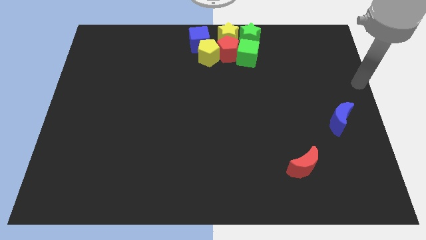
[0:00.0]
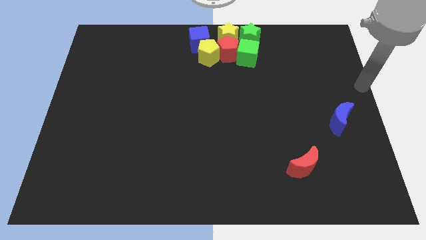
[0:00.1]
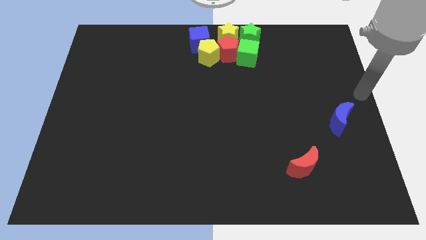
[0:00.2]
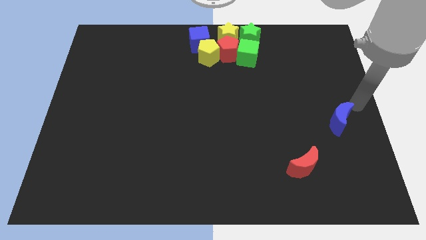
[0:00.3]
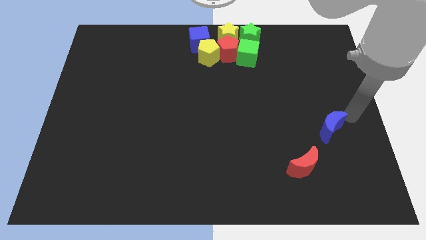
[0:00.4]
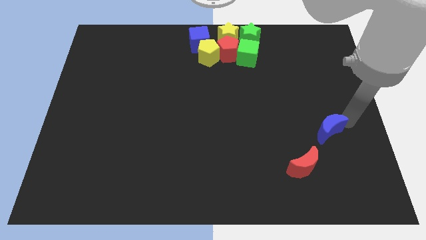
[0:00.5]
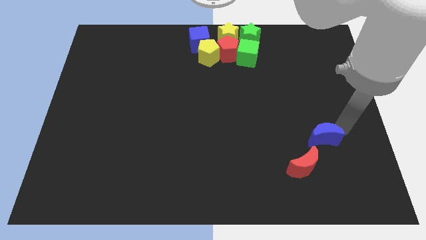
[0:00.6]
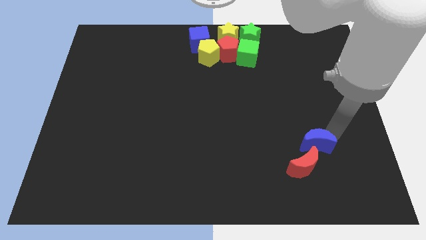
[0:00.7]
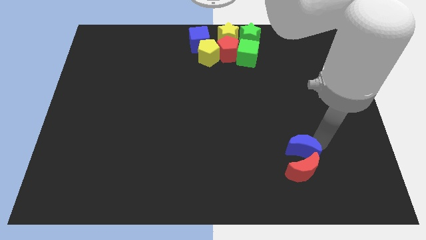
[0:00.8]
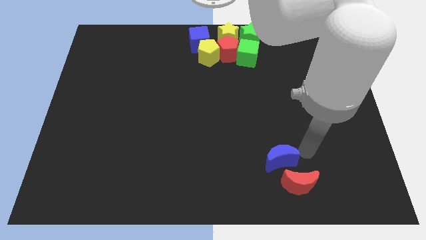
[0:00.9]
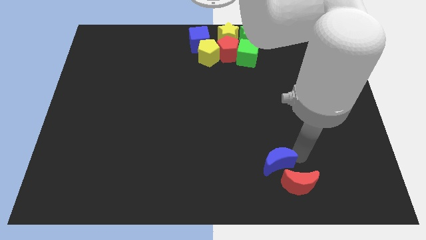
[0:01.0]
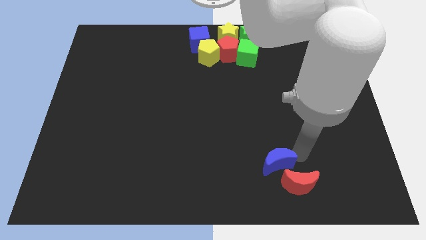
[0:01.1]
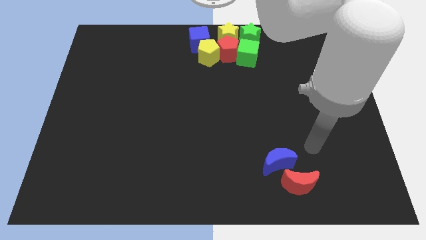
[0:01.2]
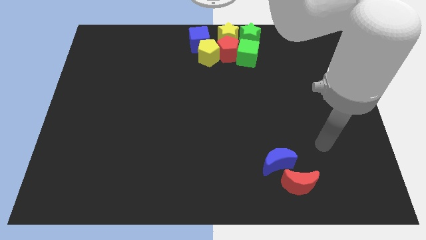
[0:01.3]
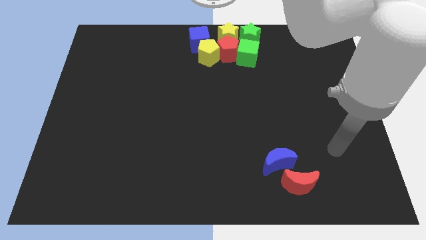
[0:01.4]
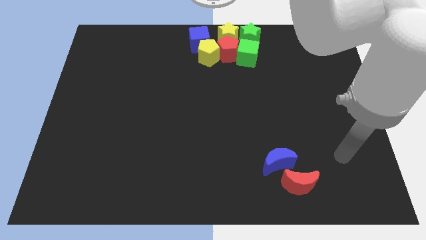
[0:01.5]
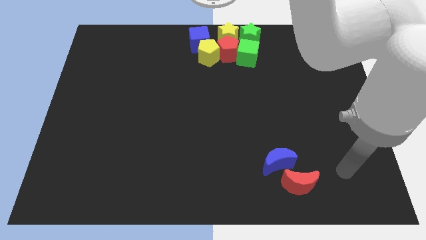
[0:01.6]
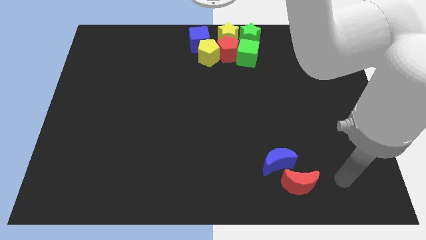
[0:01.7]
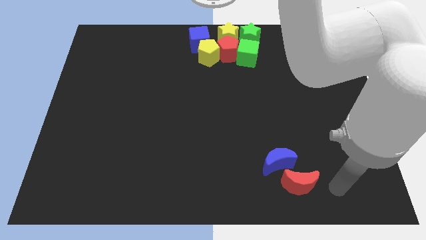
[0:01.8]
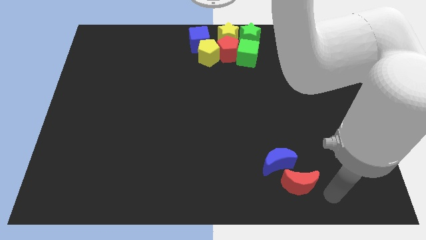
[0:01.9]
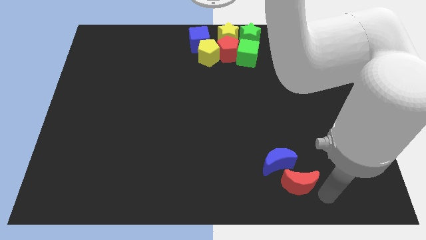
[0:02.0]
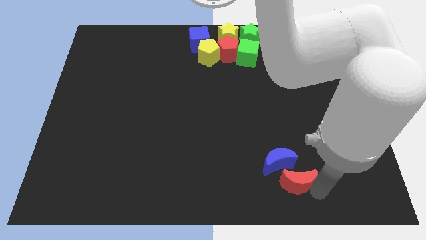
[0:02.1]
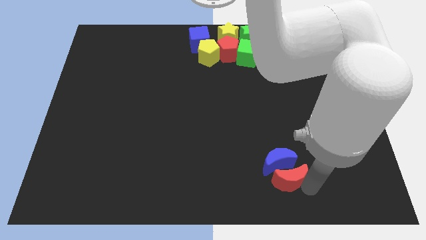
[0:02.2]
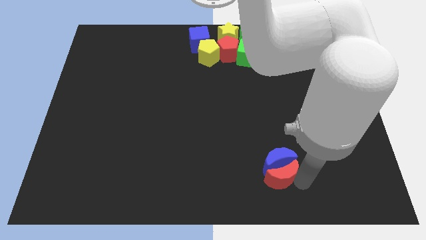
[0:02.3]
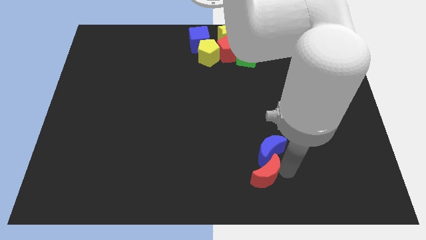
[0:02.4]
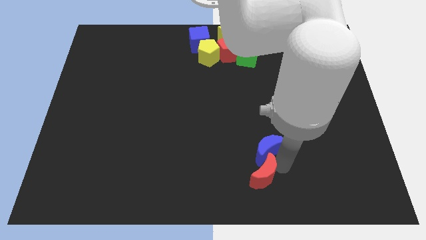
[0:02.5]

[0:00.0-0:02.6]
move blue moon into red moon

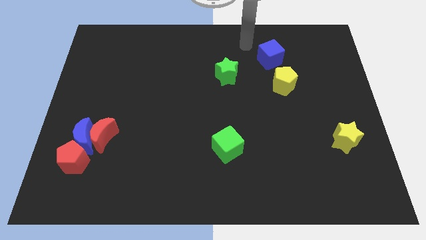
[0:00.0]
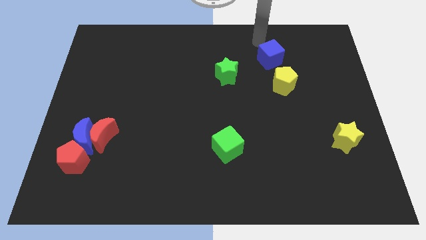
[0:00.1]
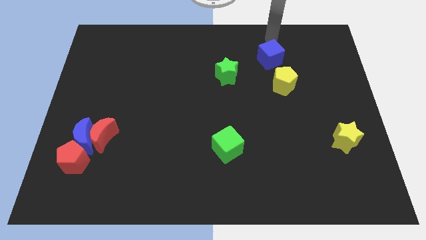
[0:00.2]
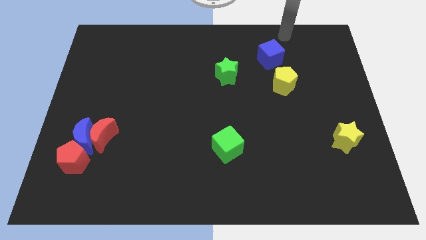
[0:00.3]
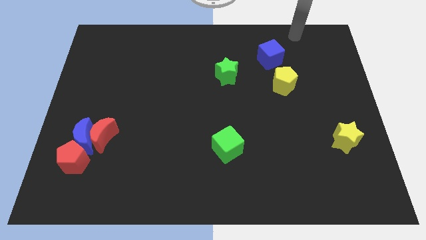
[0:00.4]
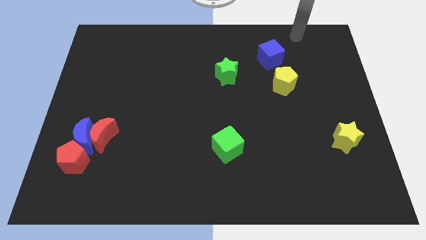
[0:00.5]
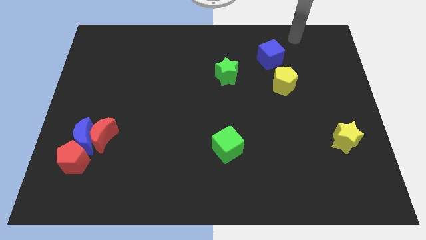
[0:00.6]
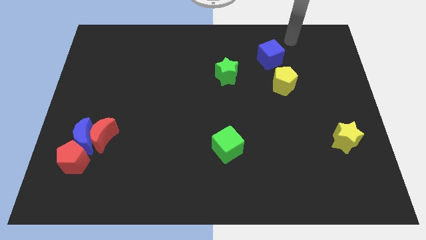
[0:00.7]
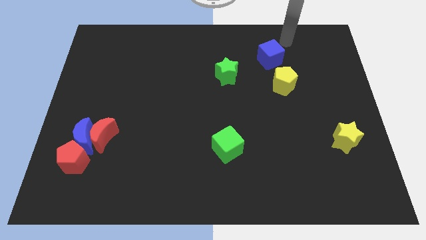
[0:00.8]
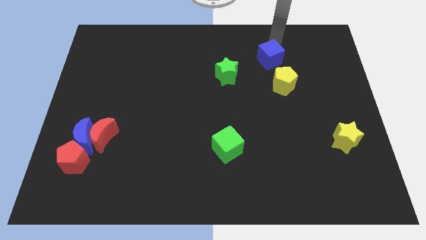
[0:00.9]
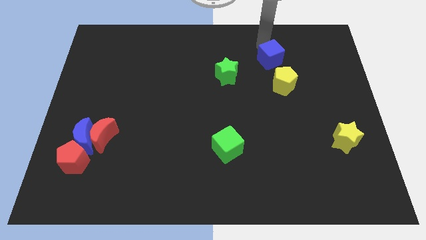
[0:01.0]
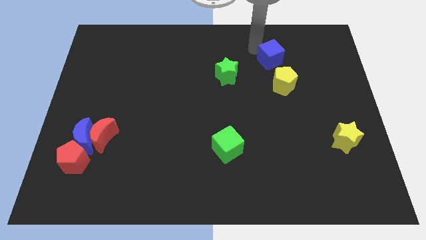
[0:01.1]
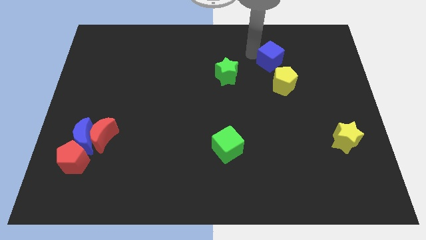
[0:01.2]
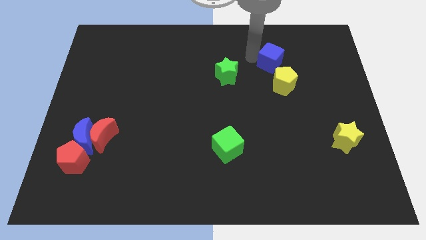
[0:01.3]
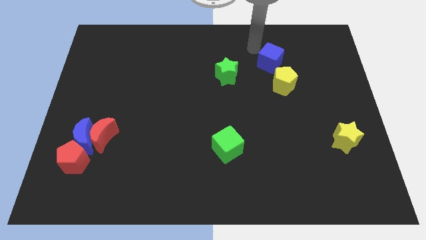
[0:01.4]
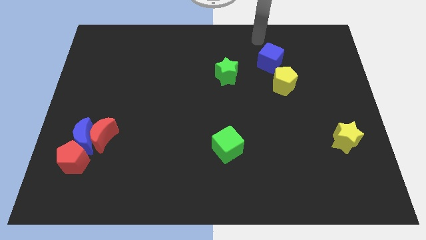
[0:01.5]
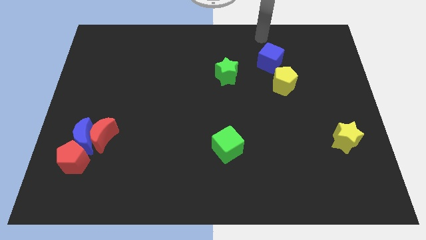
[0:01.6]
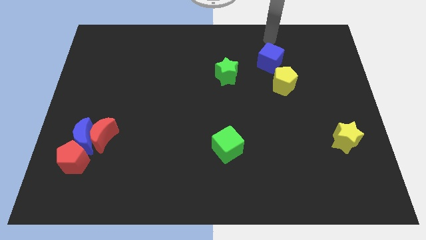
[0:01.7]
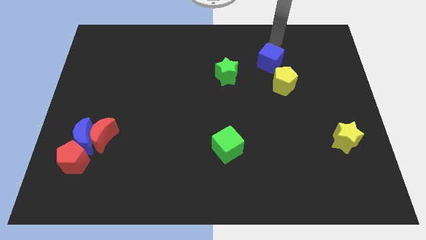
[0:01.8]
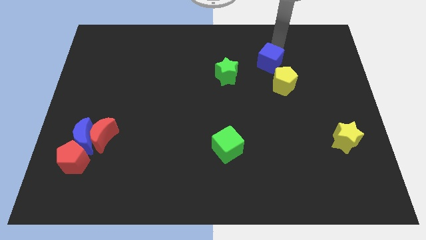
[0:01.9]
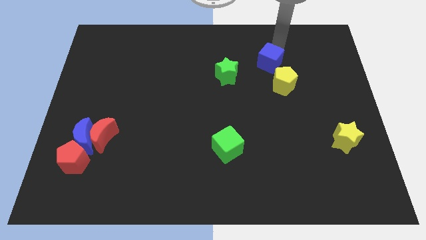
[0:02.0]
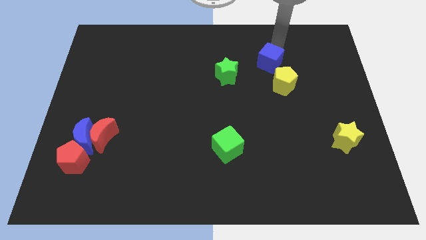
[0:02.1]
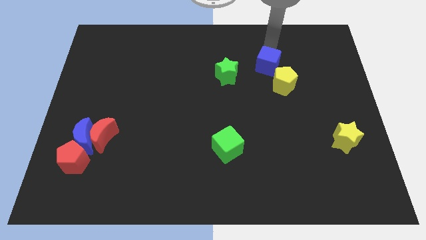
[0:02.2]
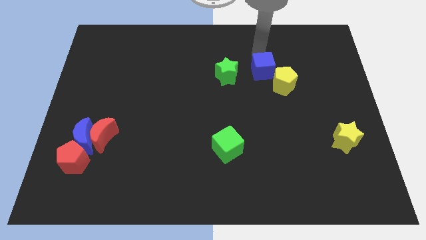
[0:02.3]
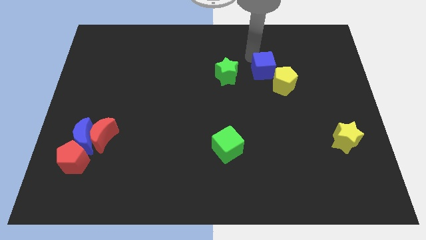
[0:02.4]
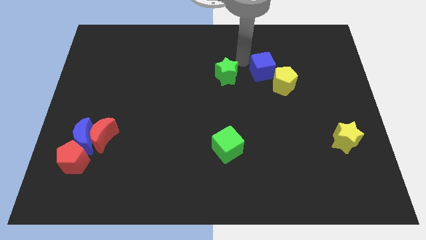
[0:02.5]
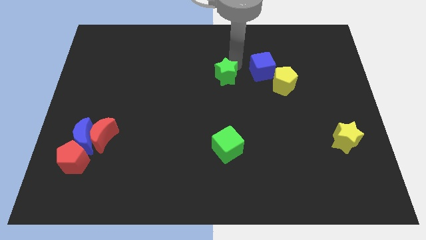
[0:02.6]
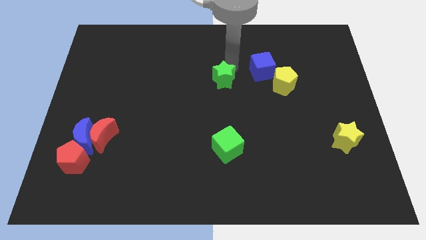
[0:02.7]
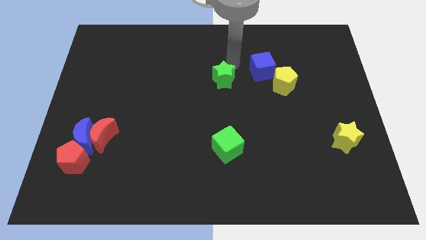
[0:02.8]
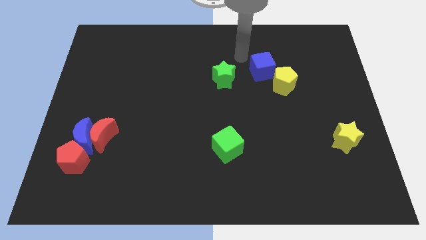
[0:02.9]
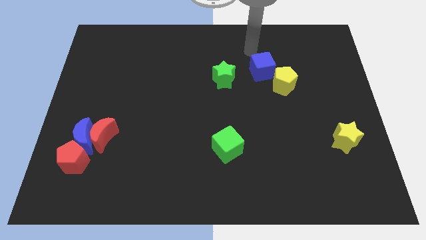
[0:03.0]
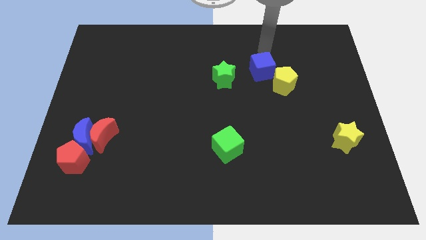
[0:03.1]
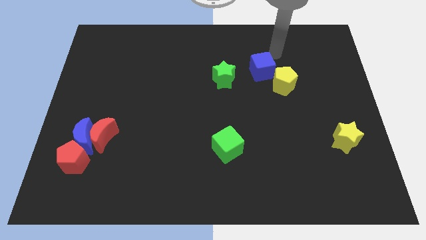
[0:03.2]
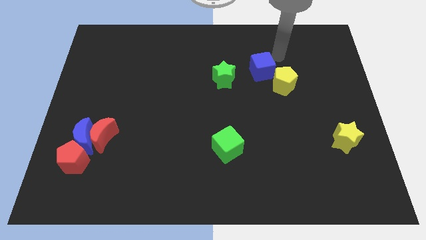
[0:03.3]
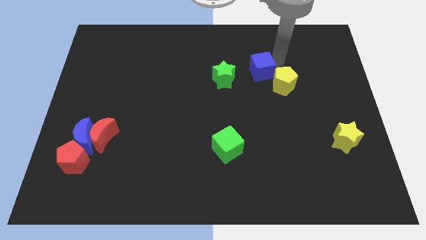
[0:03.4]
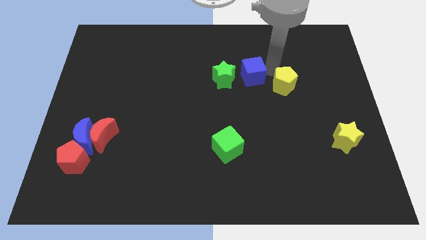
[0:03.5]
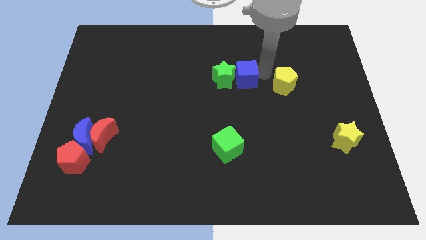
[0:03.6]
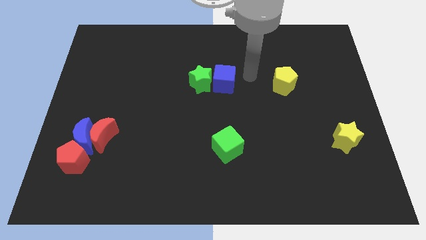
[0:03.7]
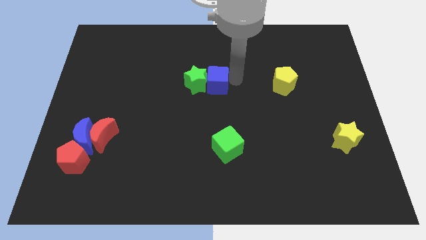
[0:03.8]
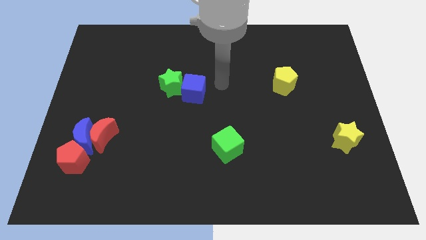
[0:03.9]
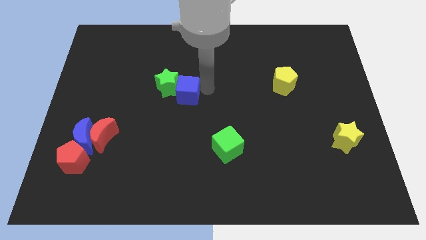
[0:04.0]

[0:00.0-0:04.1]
push the blue cube into the green star

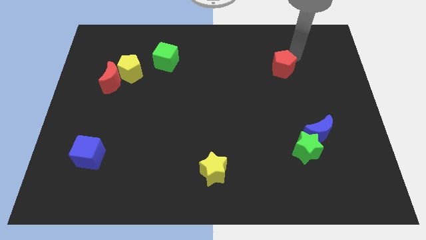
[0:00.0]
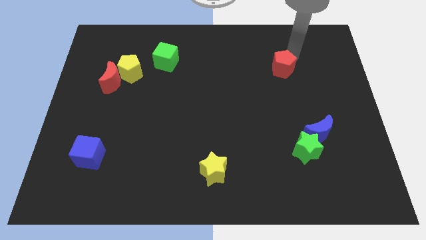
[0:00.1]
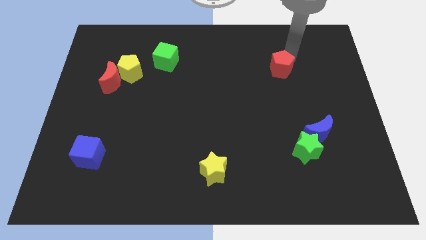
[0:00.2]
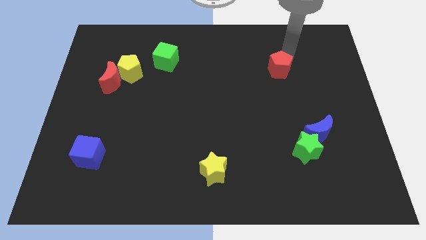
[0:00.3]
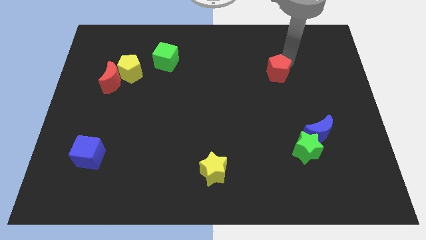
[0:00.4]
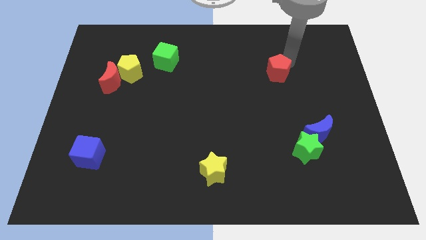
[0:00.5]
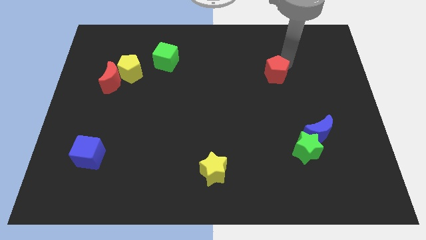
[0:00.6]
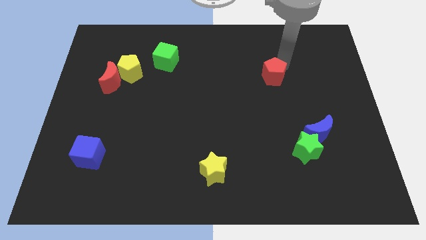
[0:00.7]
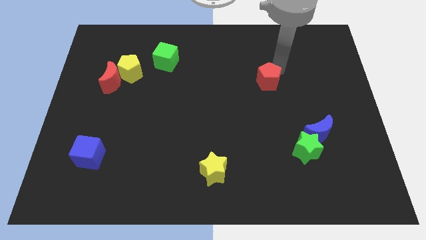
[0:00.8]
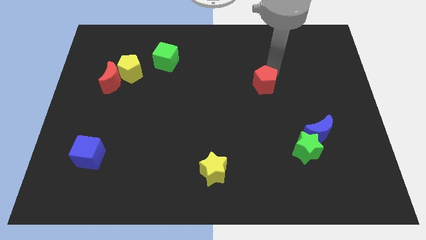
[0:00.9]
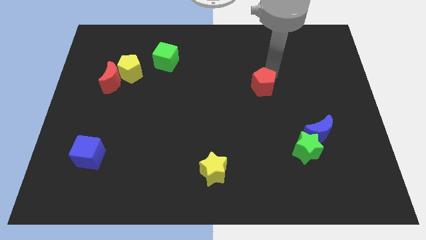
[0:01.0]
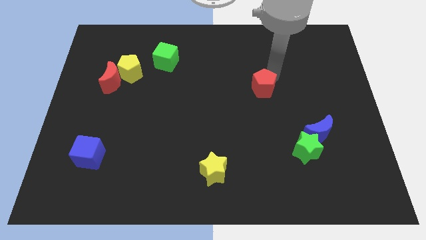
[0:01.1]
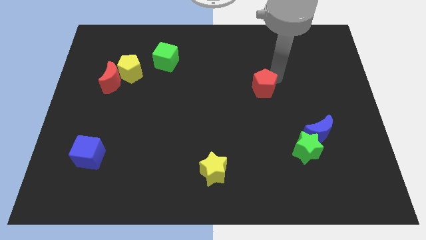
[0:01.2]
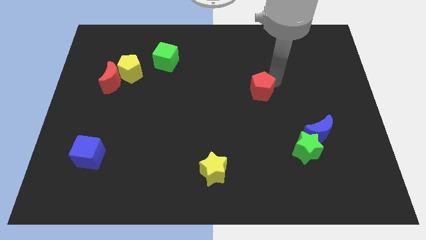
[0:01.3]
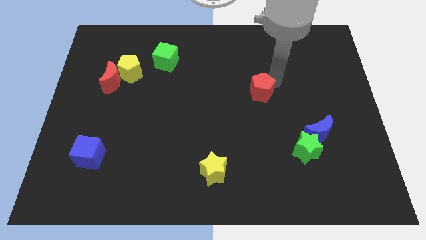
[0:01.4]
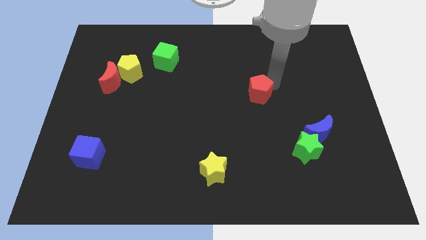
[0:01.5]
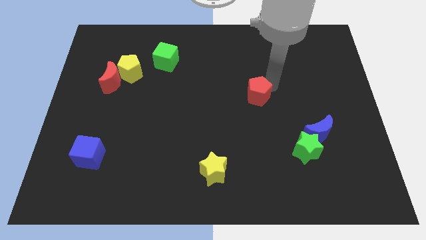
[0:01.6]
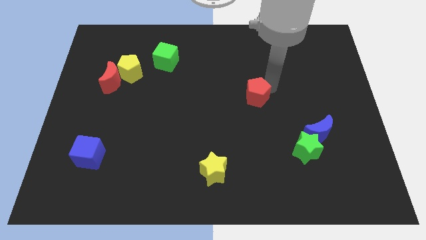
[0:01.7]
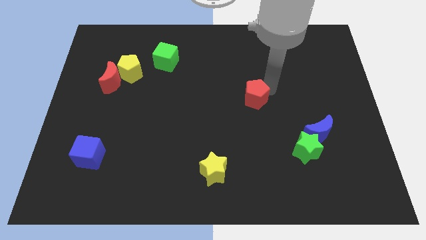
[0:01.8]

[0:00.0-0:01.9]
place the red pentagon diagonal to the green star

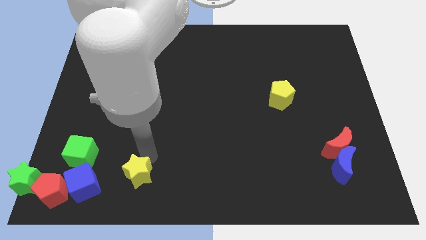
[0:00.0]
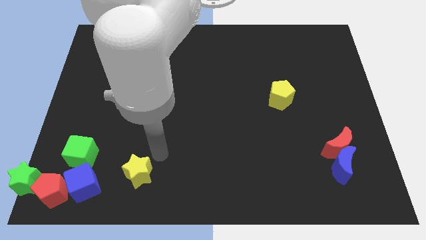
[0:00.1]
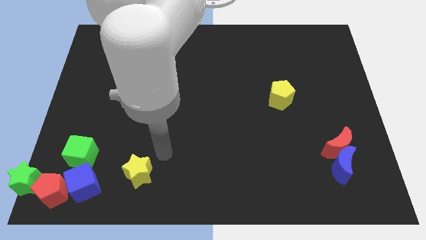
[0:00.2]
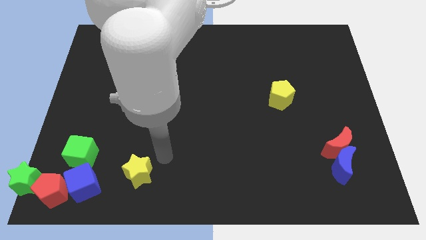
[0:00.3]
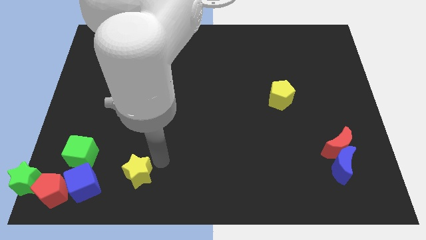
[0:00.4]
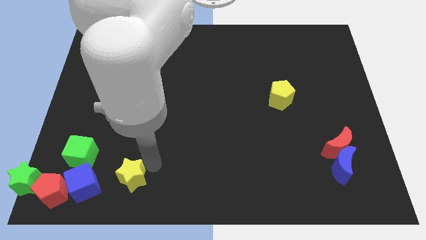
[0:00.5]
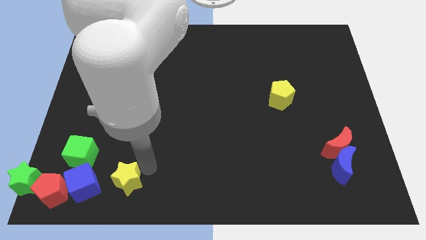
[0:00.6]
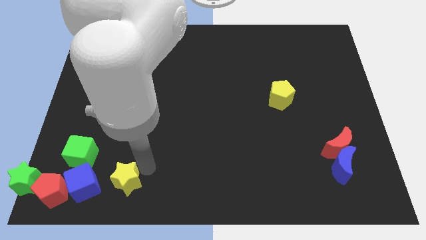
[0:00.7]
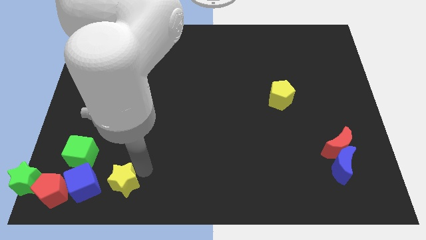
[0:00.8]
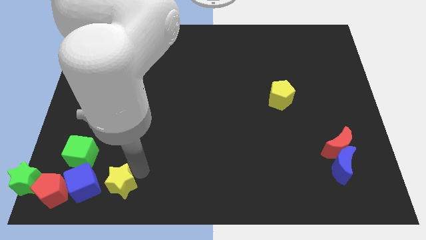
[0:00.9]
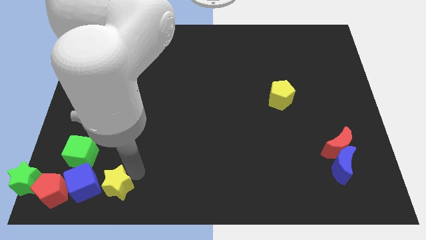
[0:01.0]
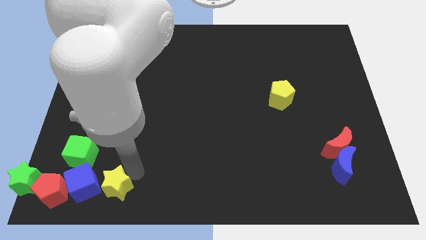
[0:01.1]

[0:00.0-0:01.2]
push the yellow star to the right side of the blue cube to form a horizontal line
